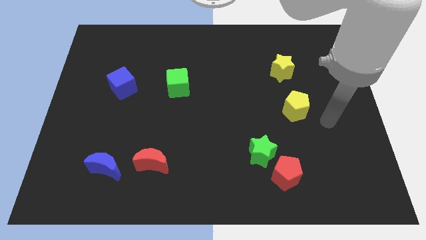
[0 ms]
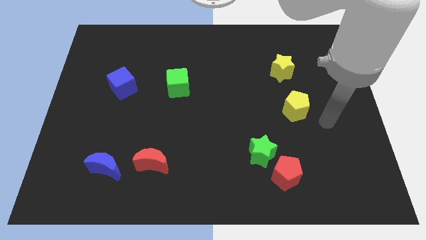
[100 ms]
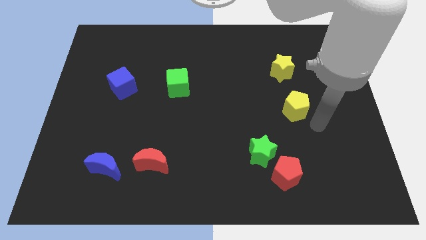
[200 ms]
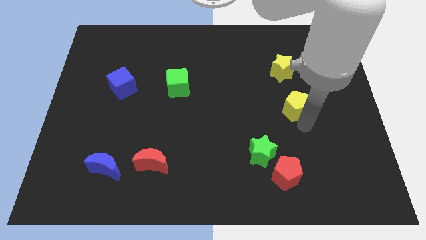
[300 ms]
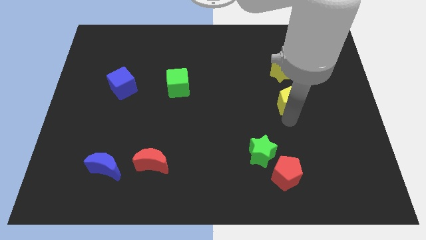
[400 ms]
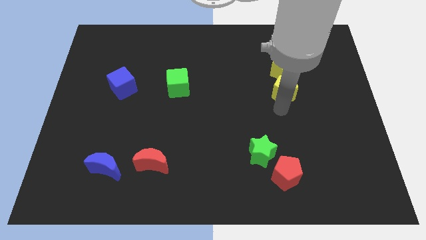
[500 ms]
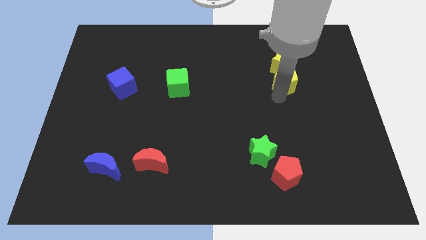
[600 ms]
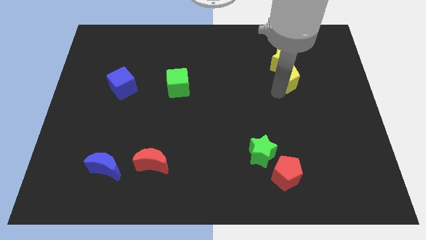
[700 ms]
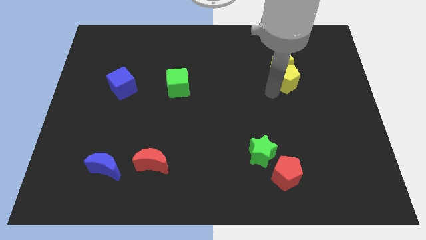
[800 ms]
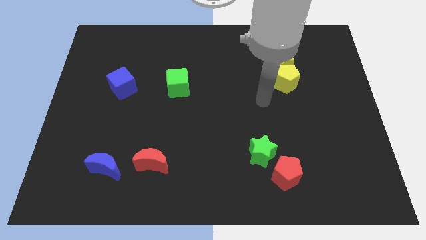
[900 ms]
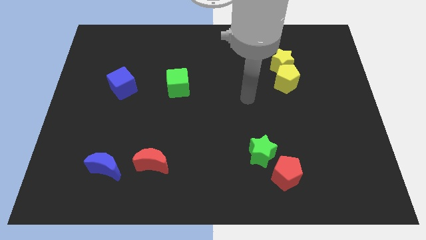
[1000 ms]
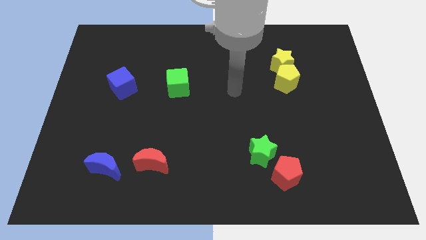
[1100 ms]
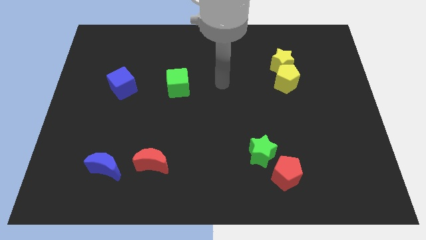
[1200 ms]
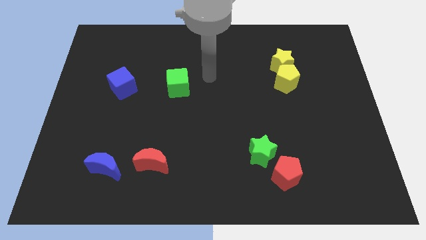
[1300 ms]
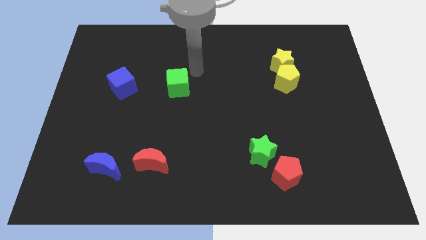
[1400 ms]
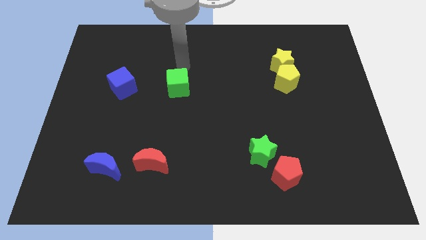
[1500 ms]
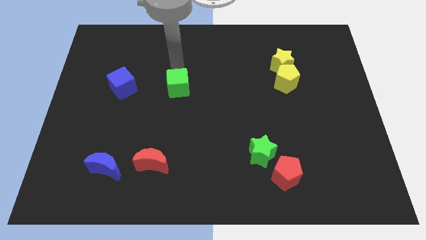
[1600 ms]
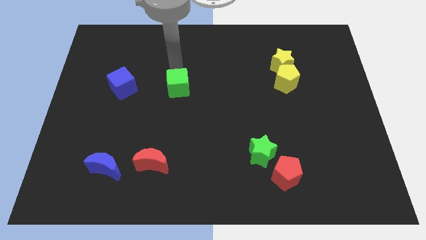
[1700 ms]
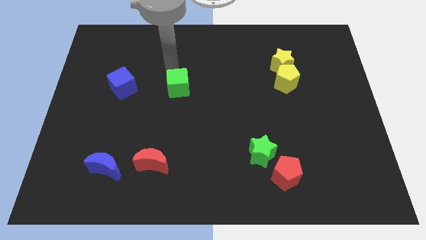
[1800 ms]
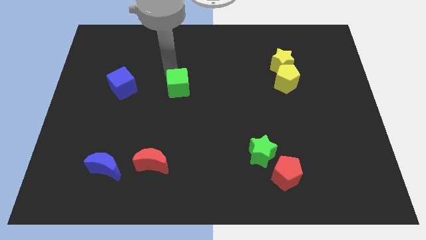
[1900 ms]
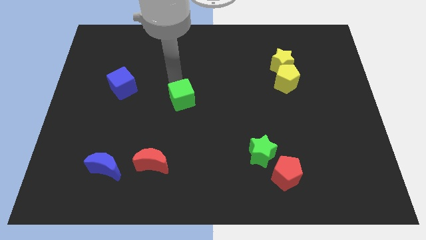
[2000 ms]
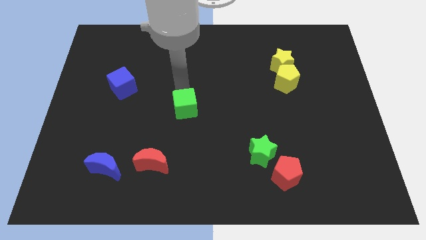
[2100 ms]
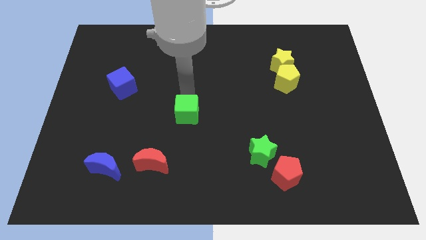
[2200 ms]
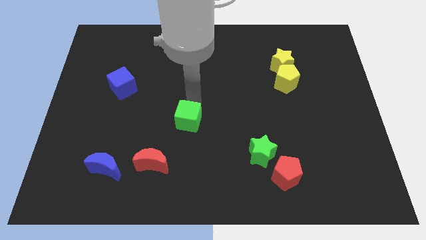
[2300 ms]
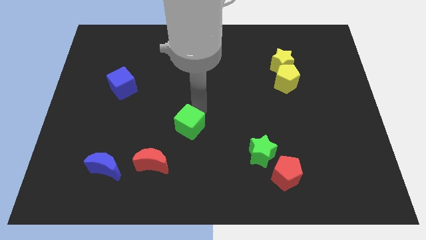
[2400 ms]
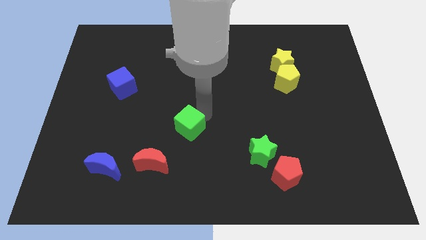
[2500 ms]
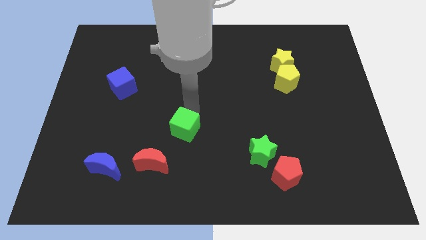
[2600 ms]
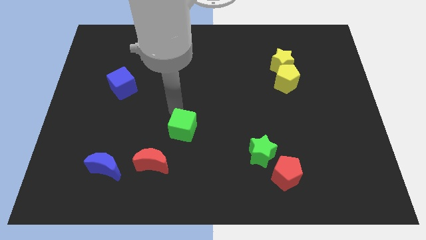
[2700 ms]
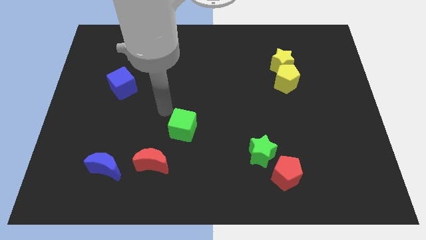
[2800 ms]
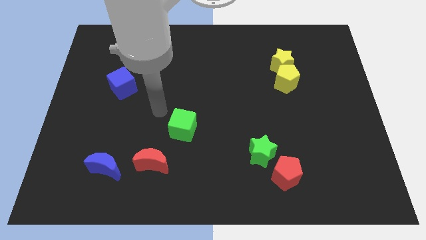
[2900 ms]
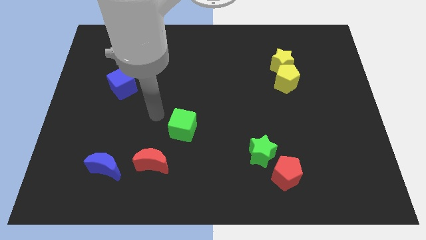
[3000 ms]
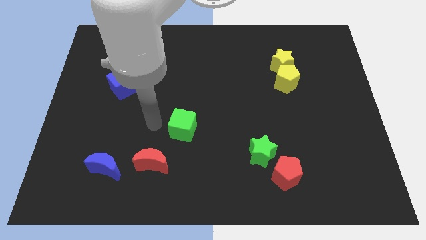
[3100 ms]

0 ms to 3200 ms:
push the yellow pentagon into the yellow star

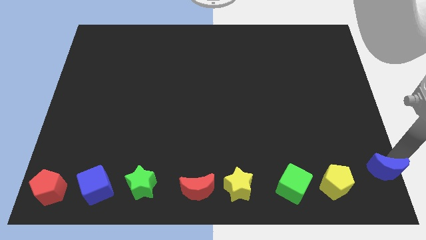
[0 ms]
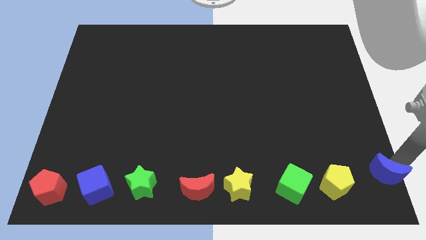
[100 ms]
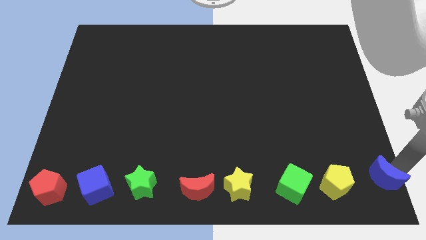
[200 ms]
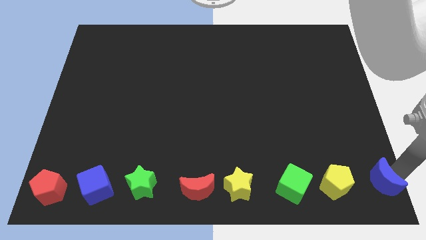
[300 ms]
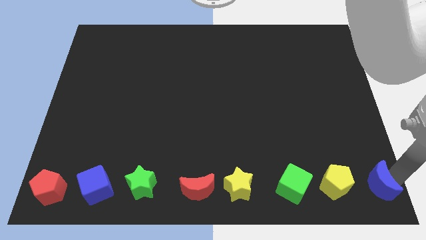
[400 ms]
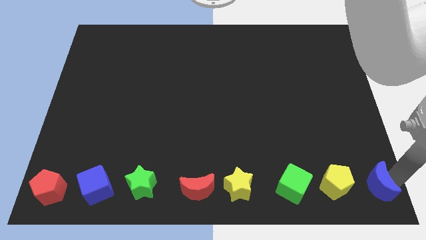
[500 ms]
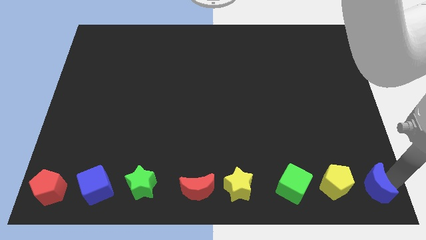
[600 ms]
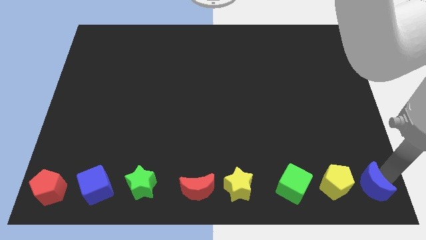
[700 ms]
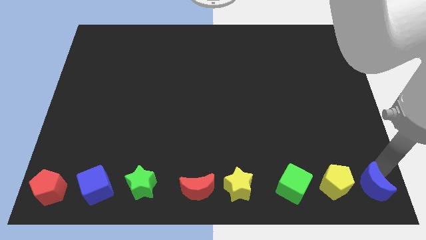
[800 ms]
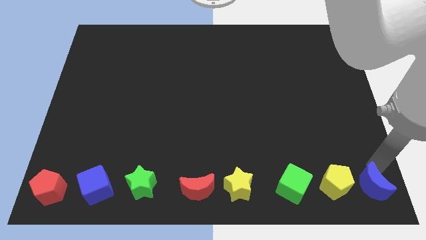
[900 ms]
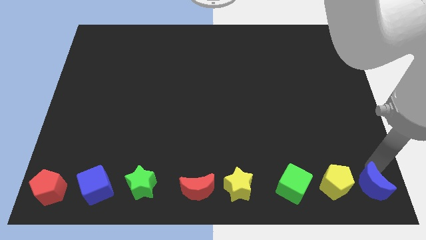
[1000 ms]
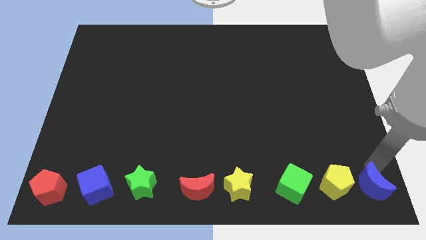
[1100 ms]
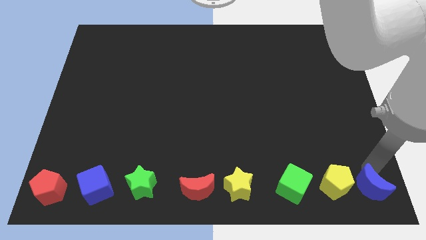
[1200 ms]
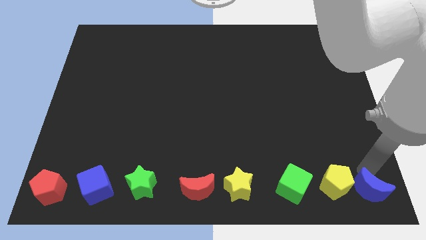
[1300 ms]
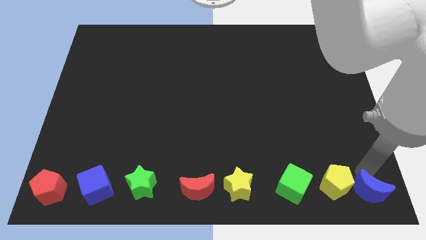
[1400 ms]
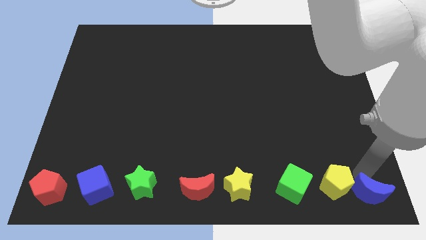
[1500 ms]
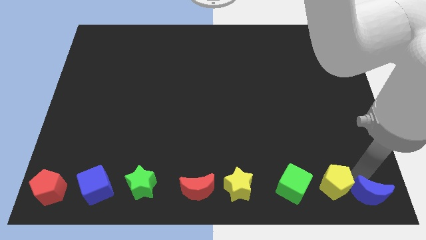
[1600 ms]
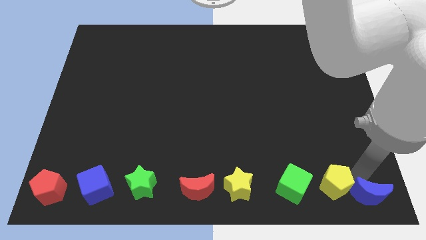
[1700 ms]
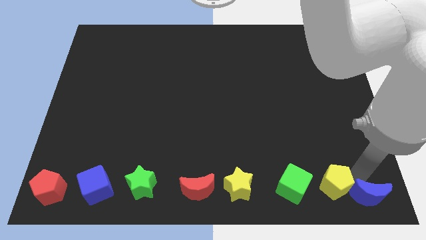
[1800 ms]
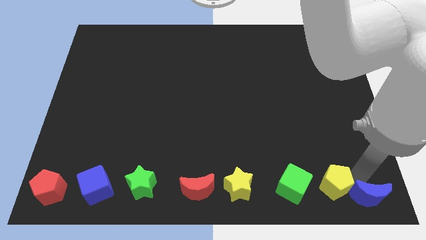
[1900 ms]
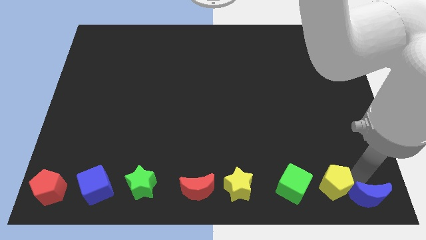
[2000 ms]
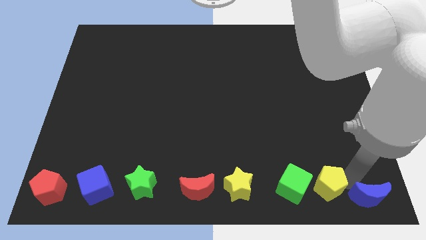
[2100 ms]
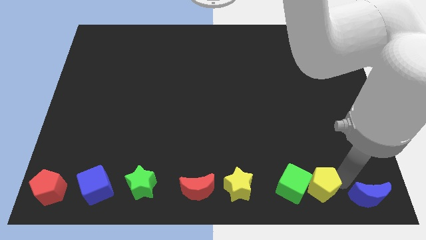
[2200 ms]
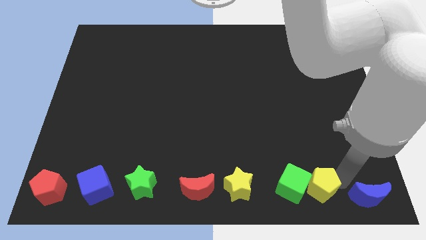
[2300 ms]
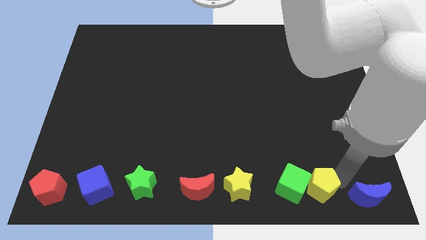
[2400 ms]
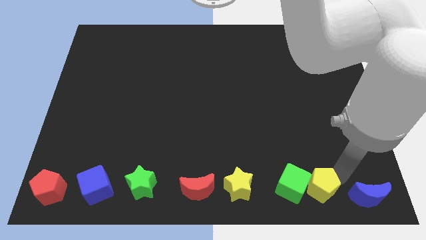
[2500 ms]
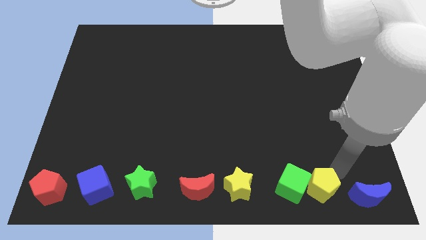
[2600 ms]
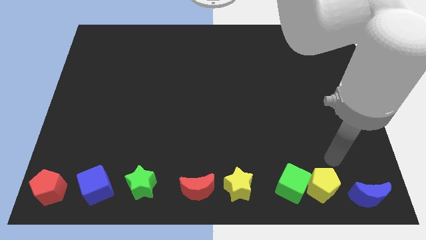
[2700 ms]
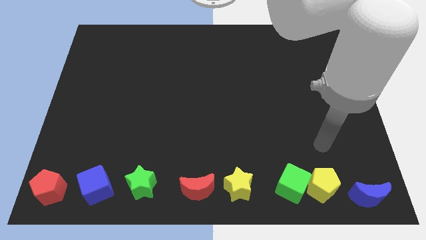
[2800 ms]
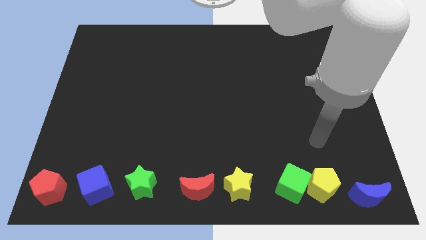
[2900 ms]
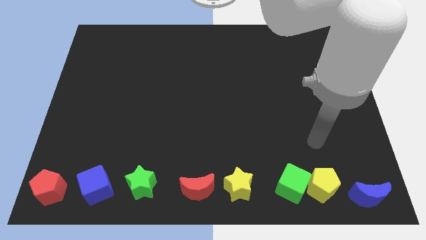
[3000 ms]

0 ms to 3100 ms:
push yellow pentagon into the green cube

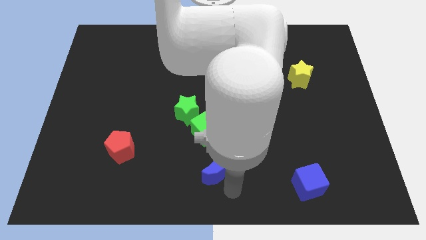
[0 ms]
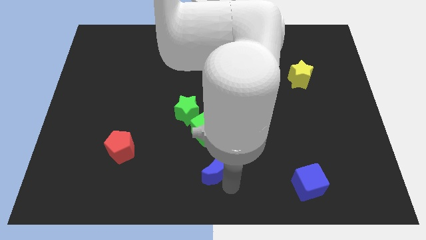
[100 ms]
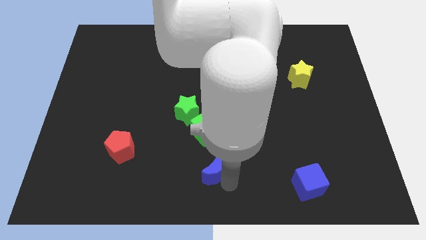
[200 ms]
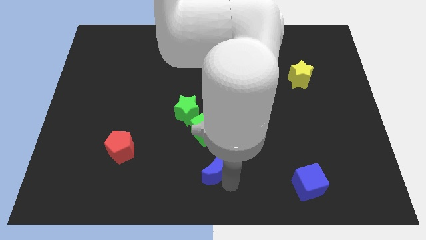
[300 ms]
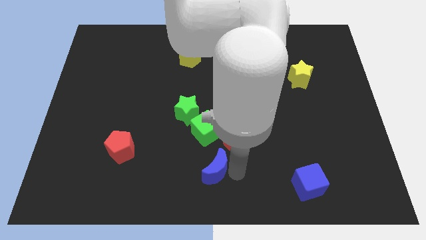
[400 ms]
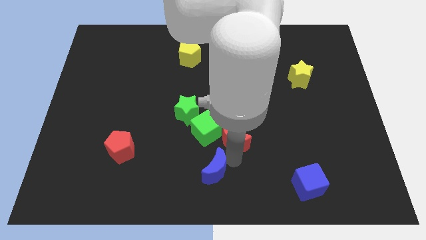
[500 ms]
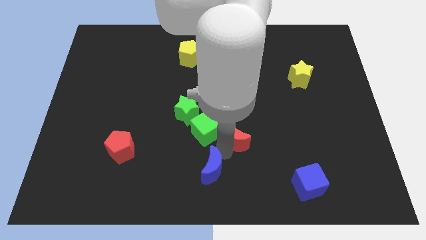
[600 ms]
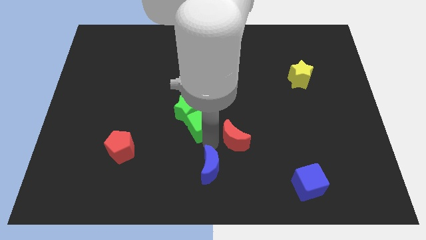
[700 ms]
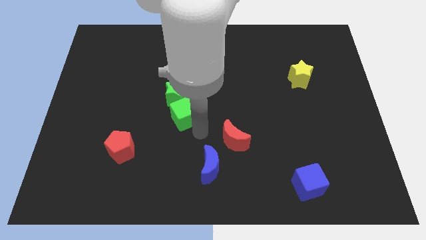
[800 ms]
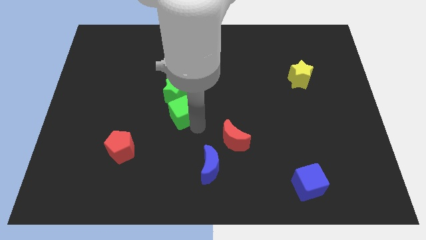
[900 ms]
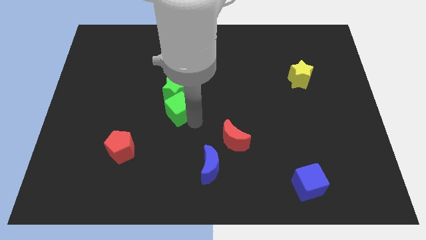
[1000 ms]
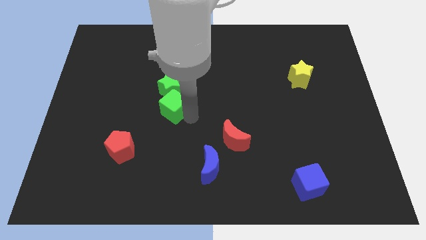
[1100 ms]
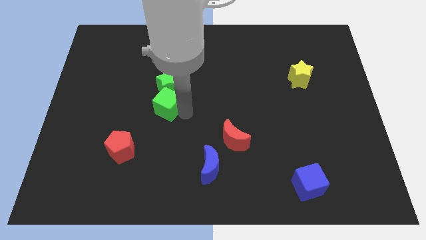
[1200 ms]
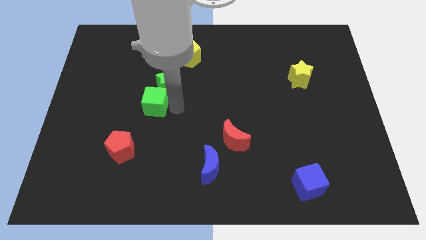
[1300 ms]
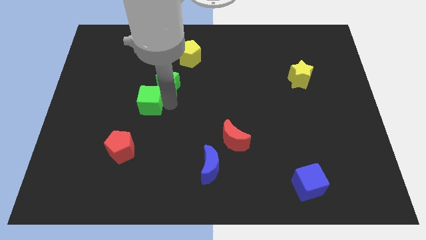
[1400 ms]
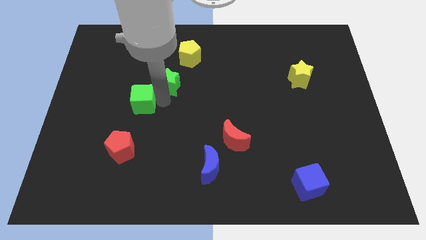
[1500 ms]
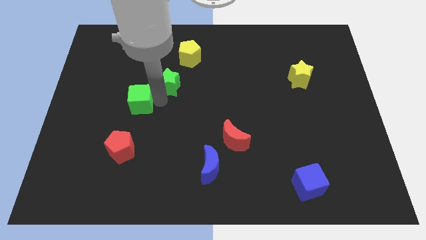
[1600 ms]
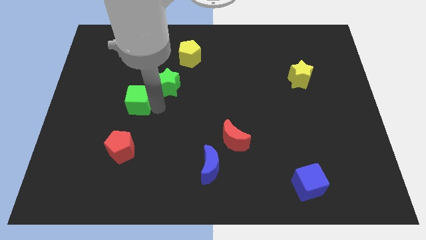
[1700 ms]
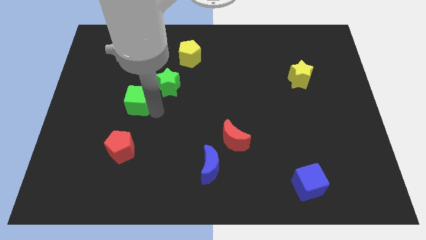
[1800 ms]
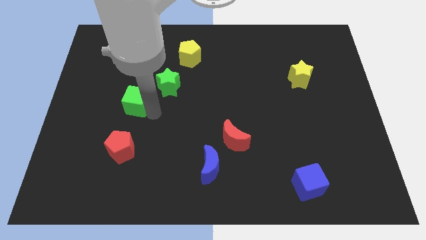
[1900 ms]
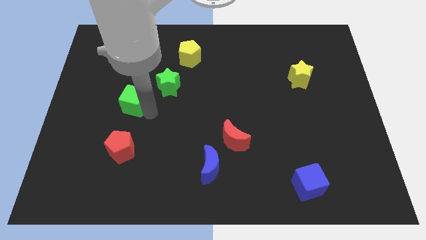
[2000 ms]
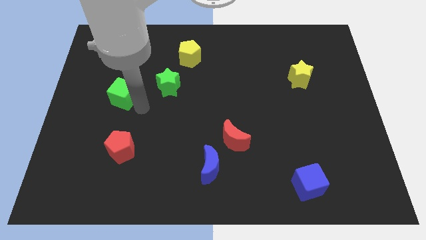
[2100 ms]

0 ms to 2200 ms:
place the green cube vertically above the red pentagon

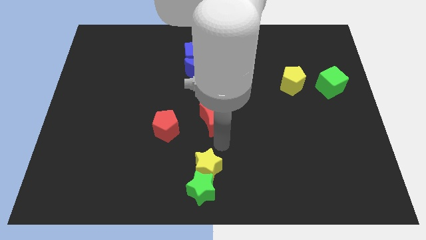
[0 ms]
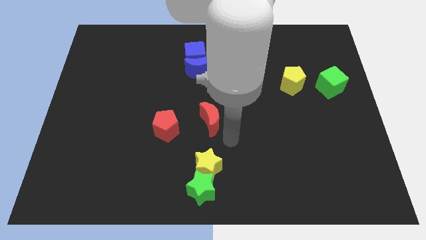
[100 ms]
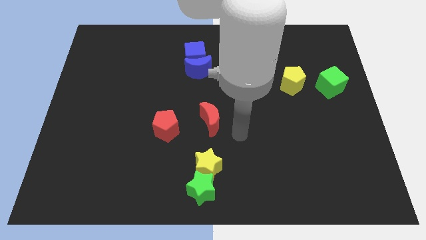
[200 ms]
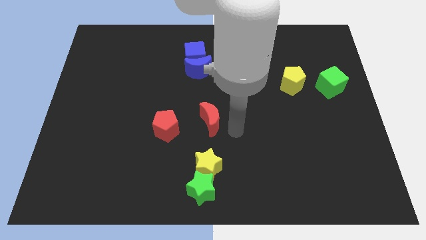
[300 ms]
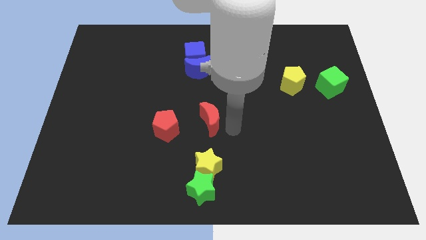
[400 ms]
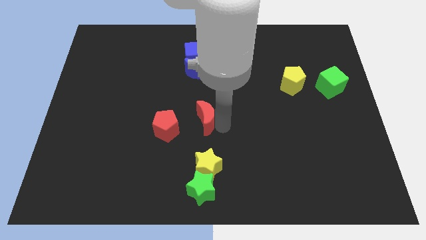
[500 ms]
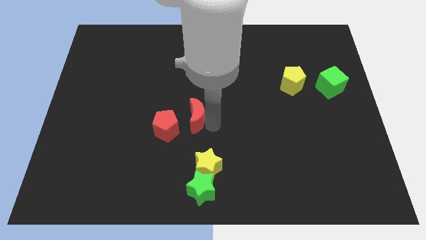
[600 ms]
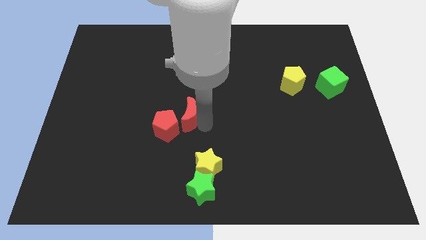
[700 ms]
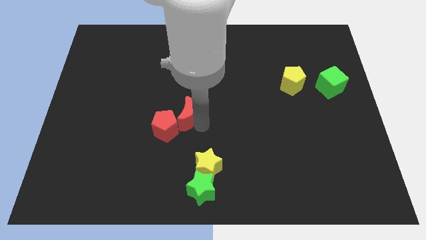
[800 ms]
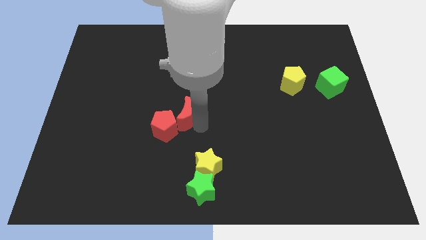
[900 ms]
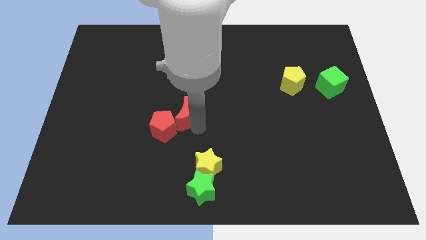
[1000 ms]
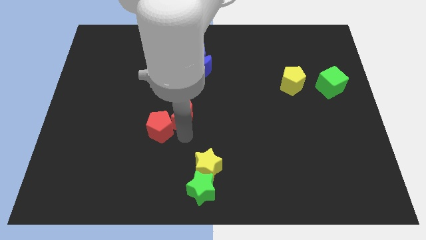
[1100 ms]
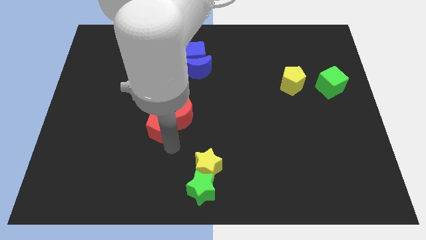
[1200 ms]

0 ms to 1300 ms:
push the red moon into the red pentagon
